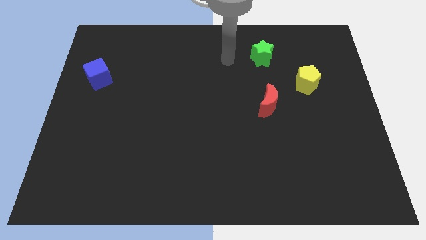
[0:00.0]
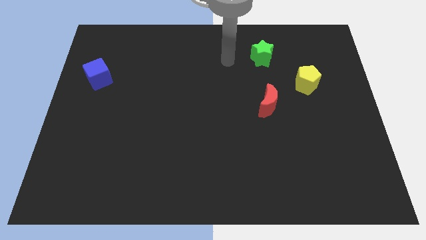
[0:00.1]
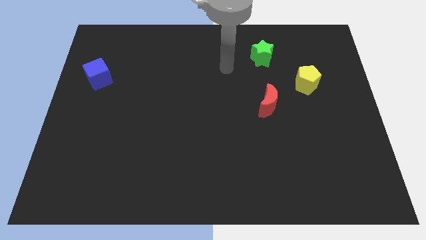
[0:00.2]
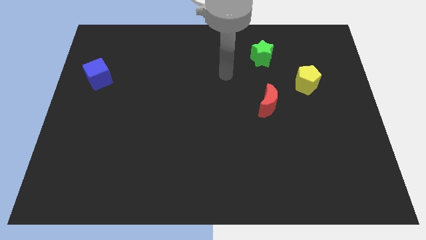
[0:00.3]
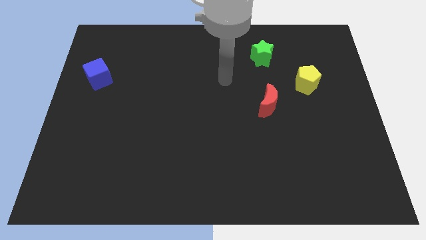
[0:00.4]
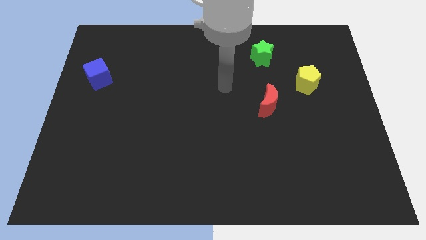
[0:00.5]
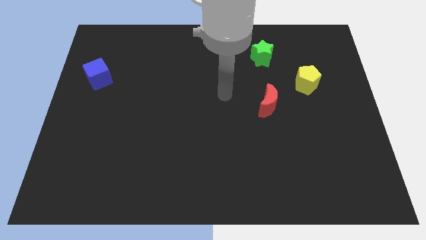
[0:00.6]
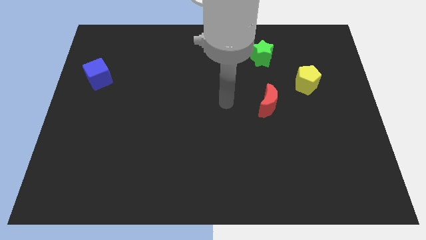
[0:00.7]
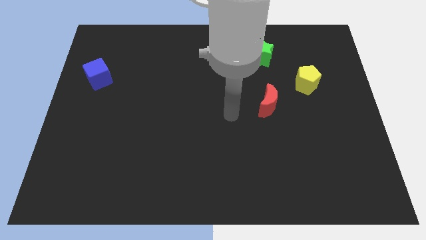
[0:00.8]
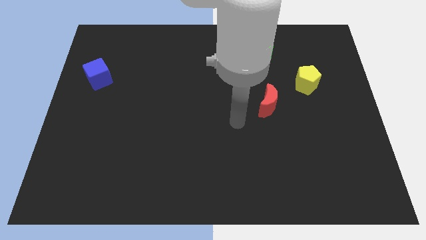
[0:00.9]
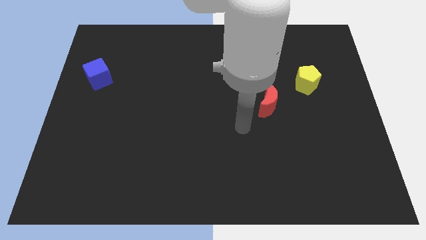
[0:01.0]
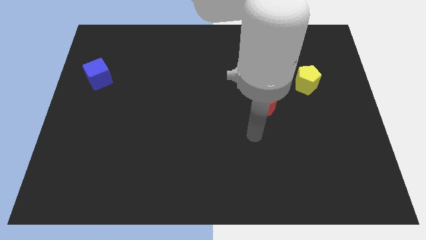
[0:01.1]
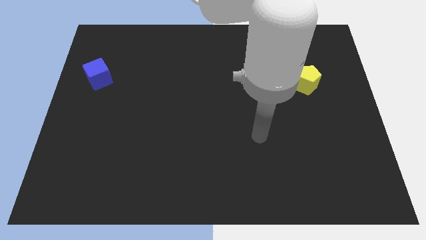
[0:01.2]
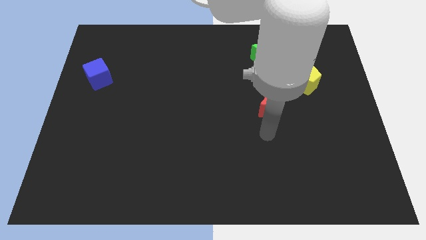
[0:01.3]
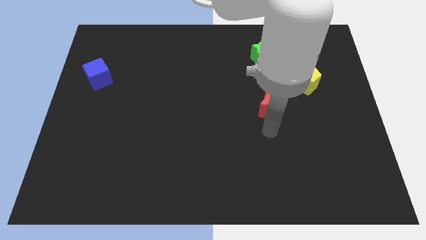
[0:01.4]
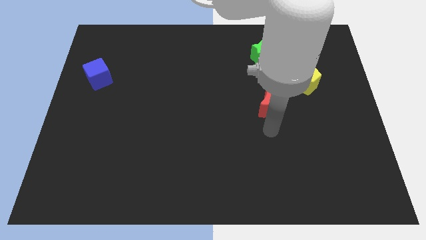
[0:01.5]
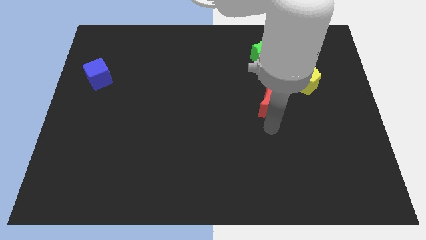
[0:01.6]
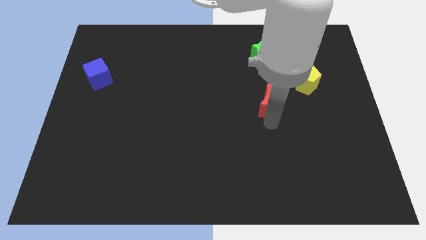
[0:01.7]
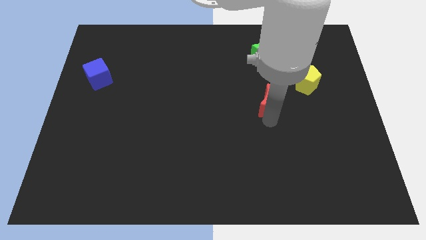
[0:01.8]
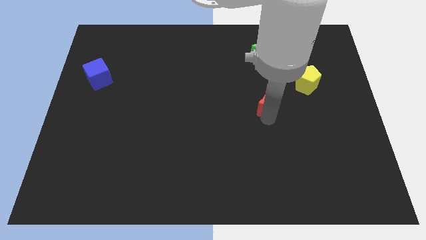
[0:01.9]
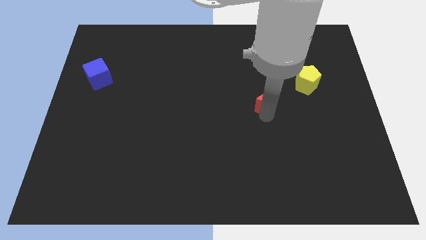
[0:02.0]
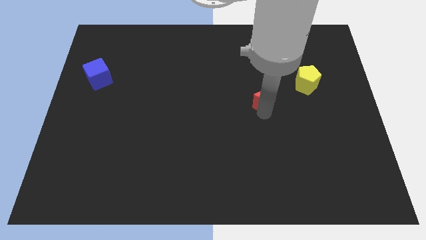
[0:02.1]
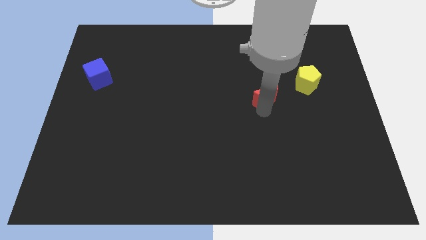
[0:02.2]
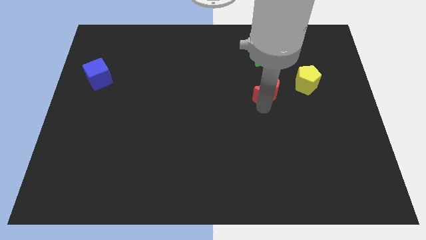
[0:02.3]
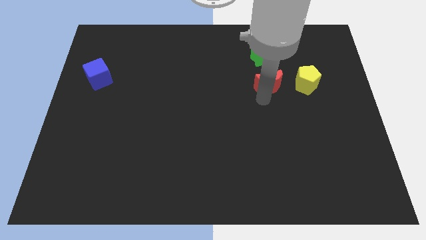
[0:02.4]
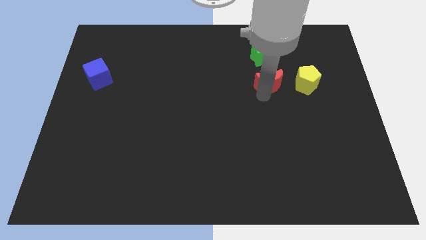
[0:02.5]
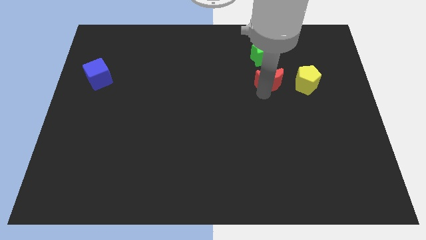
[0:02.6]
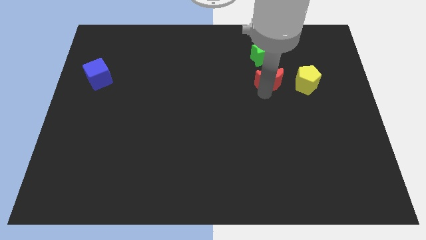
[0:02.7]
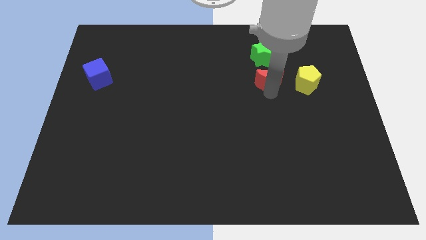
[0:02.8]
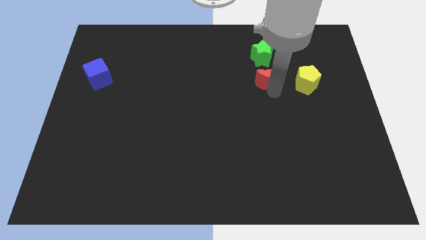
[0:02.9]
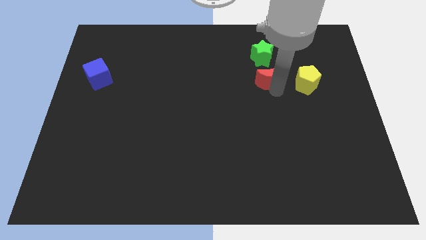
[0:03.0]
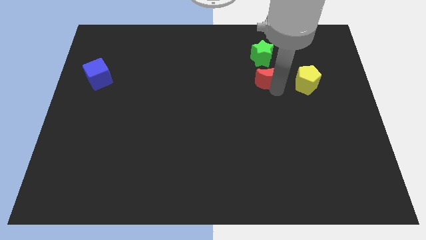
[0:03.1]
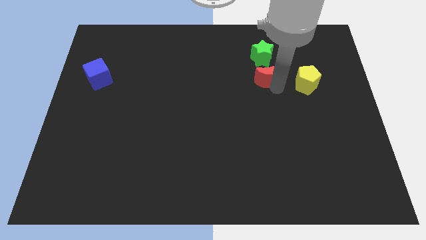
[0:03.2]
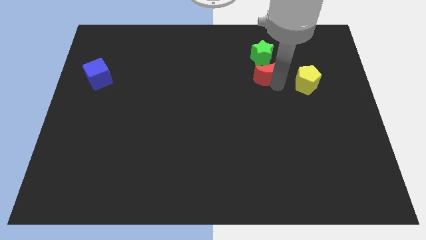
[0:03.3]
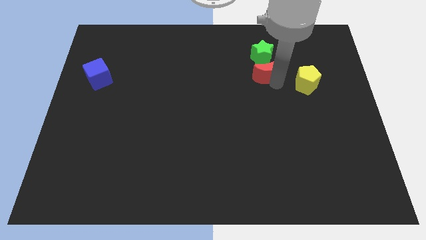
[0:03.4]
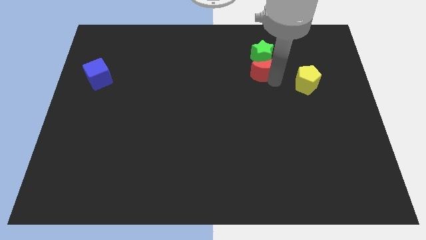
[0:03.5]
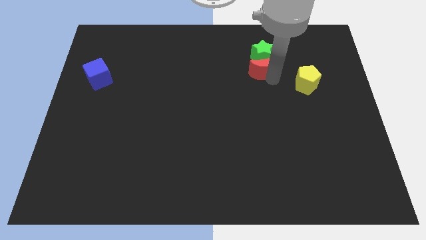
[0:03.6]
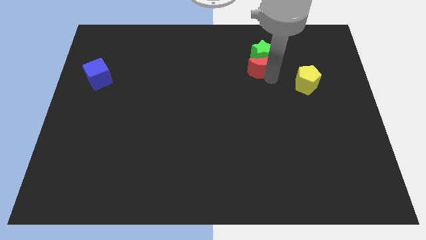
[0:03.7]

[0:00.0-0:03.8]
put the red block close to the green star

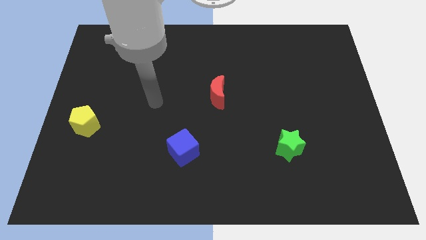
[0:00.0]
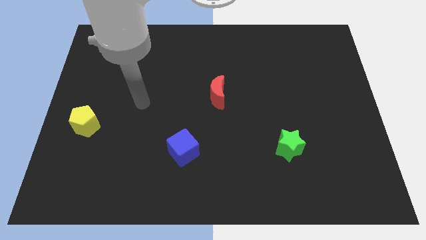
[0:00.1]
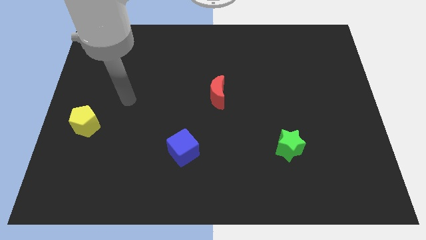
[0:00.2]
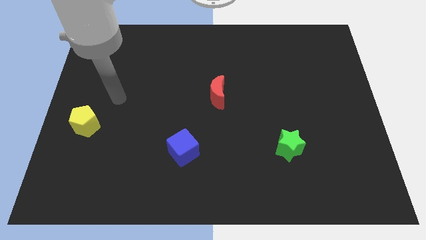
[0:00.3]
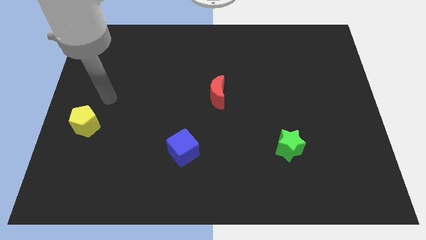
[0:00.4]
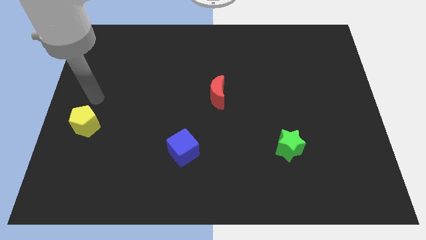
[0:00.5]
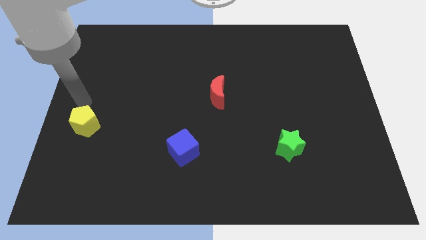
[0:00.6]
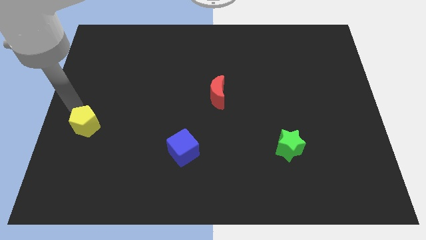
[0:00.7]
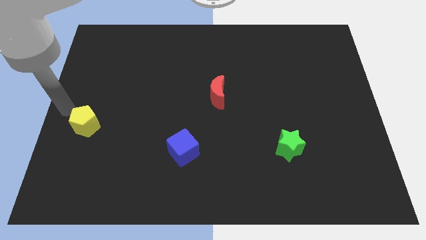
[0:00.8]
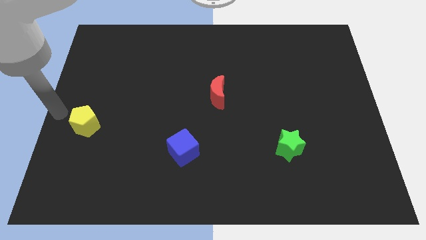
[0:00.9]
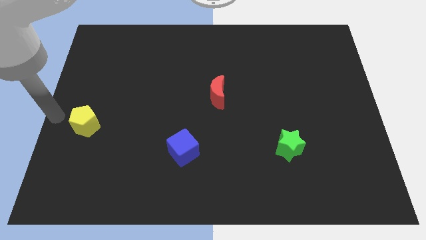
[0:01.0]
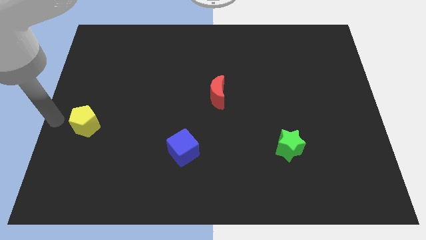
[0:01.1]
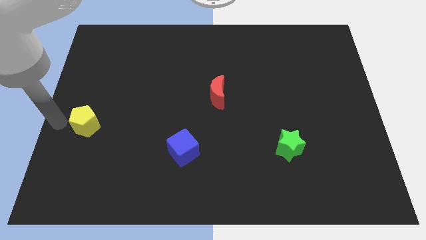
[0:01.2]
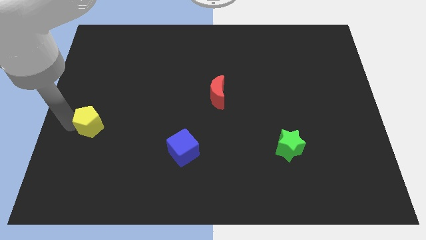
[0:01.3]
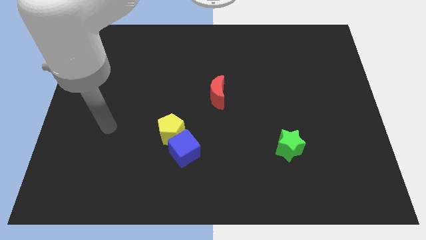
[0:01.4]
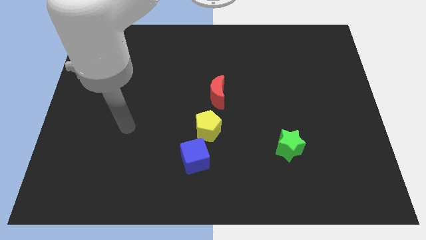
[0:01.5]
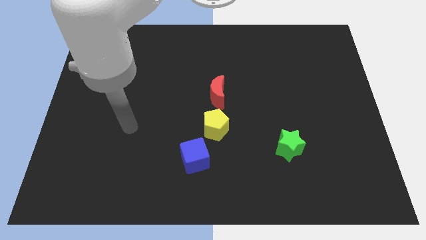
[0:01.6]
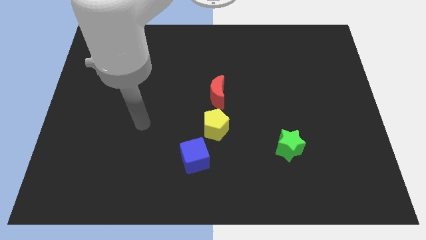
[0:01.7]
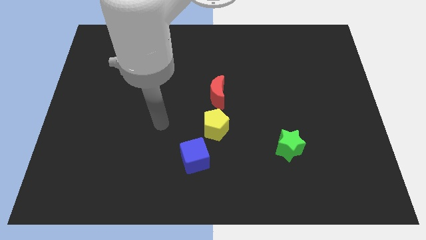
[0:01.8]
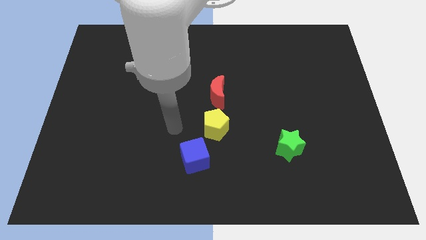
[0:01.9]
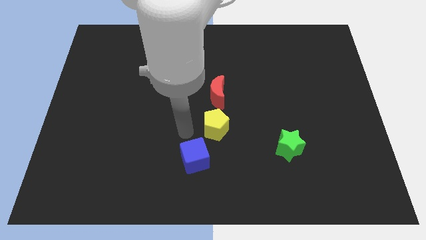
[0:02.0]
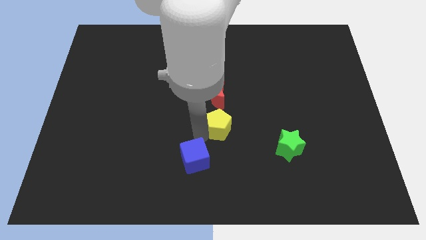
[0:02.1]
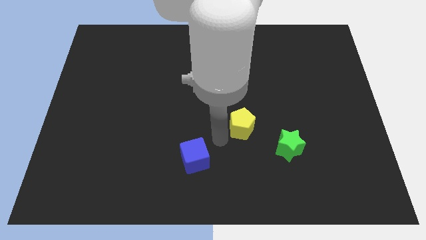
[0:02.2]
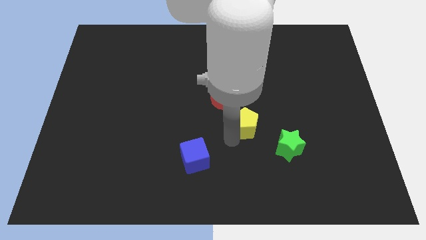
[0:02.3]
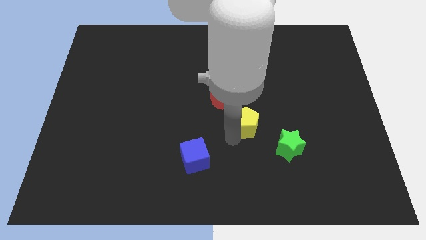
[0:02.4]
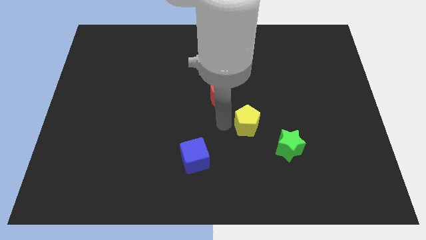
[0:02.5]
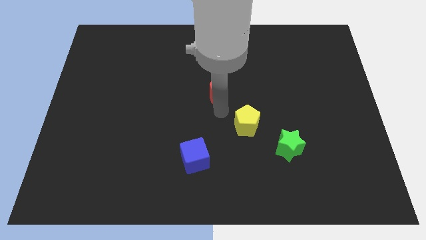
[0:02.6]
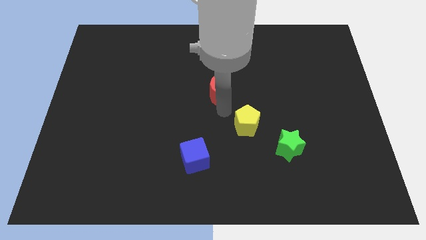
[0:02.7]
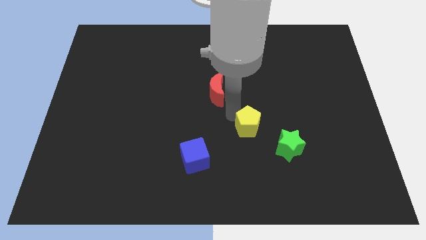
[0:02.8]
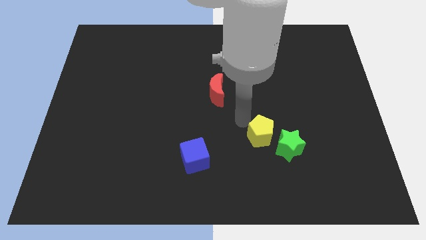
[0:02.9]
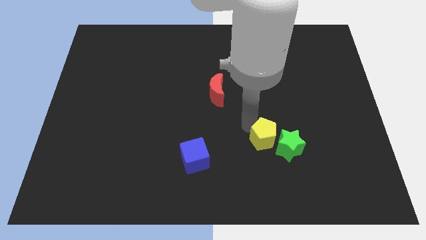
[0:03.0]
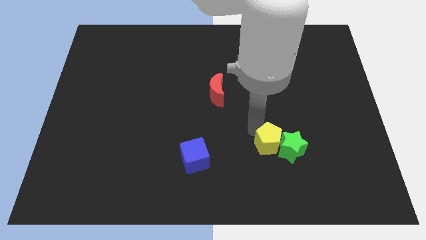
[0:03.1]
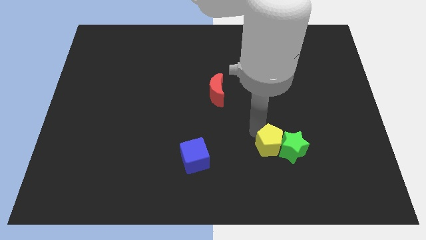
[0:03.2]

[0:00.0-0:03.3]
push the pentagon to the green star

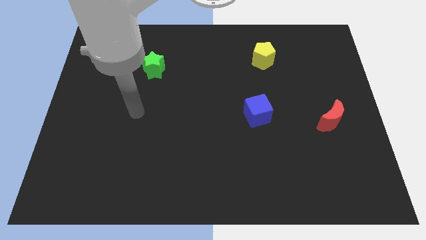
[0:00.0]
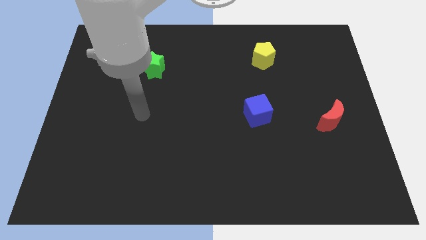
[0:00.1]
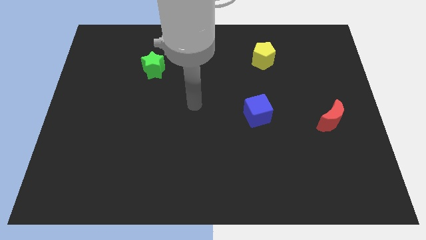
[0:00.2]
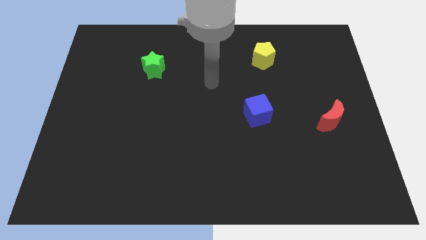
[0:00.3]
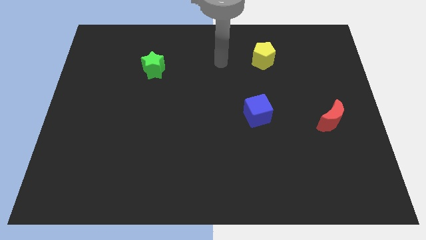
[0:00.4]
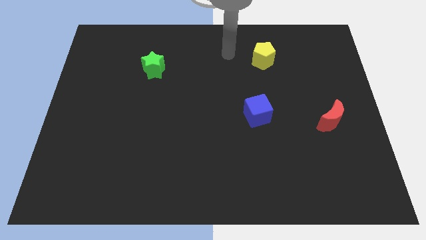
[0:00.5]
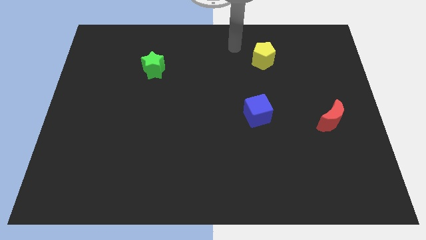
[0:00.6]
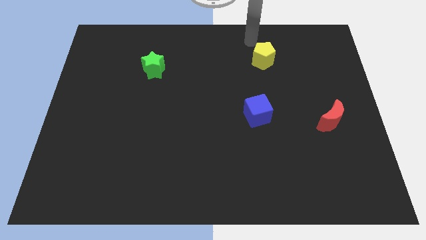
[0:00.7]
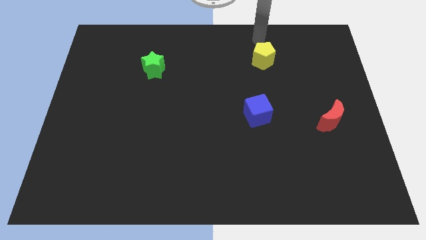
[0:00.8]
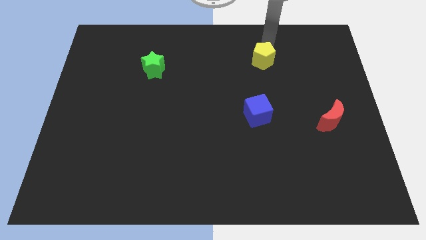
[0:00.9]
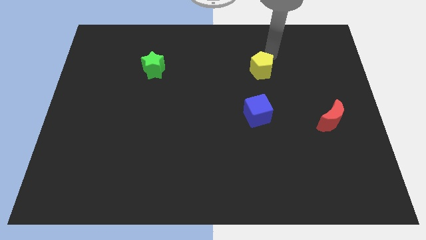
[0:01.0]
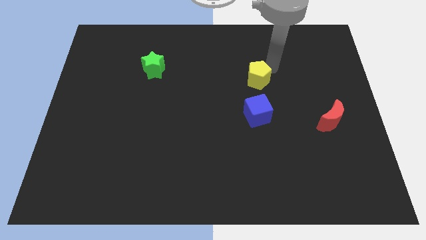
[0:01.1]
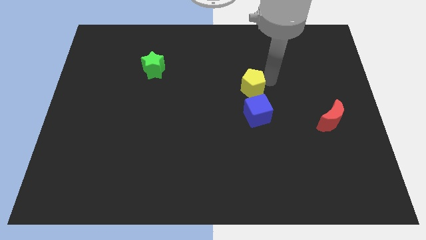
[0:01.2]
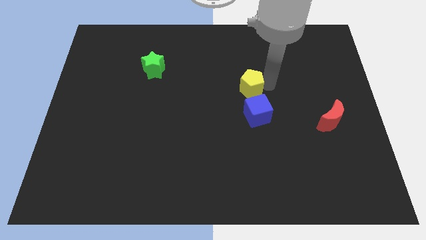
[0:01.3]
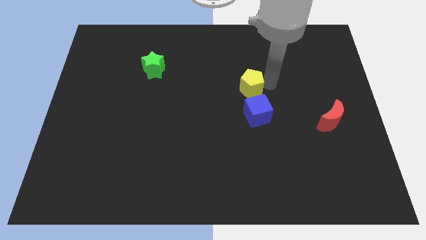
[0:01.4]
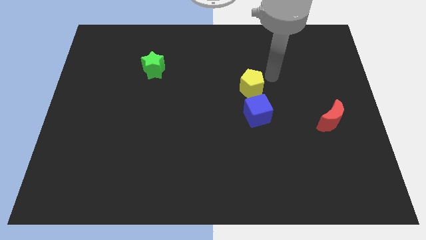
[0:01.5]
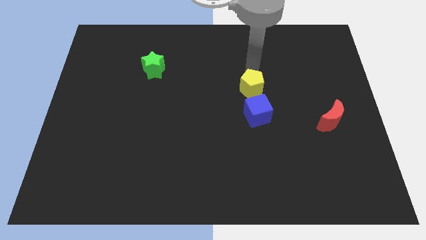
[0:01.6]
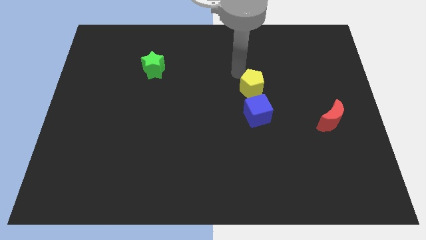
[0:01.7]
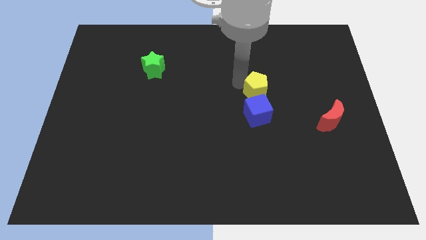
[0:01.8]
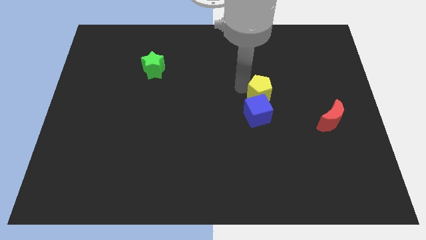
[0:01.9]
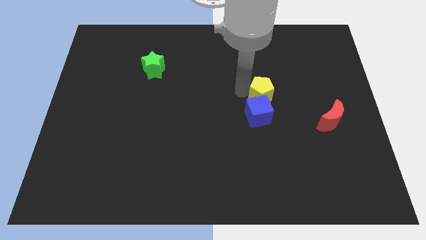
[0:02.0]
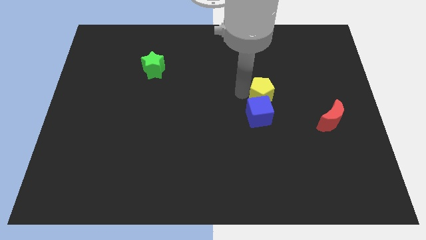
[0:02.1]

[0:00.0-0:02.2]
push the yellow block close to the cube
